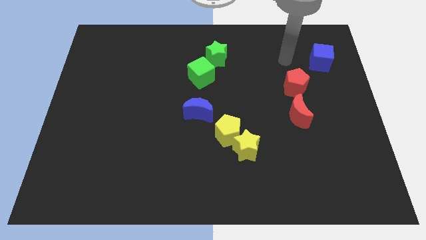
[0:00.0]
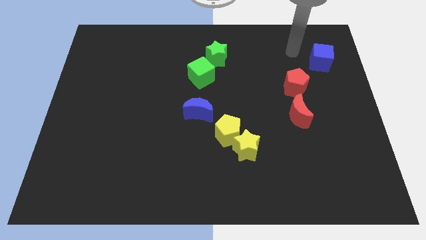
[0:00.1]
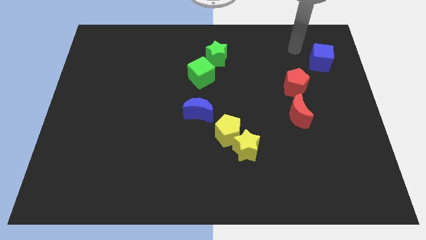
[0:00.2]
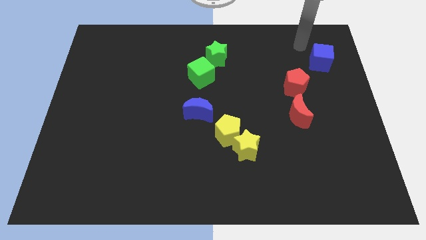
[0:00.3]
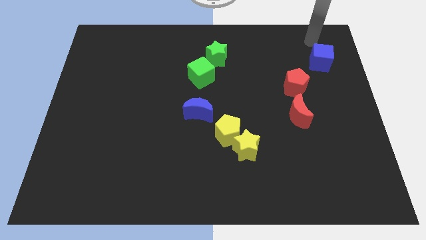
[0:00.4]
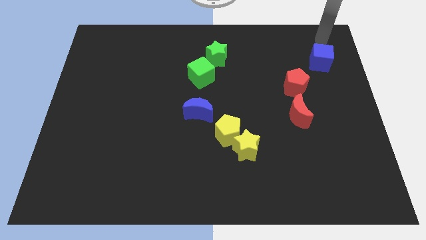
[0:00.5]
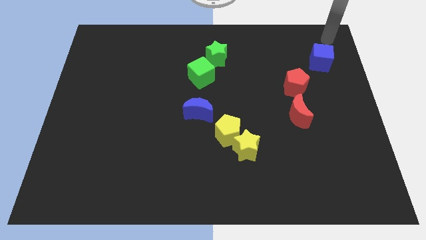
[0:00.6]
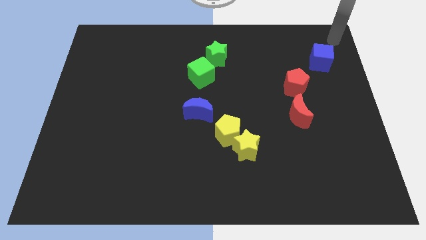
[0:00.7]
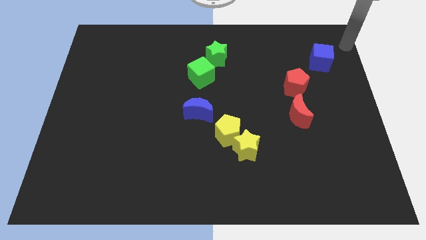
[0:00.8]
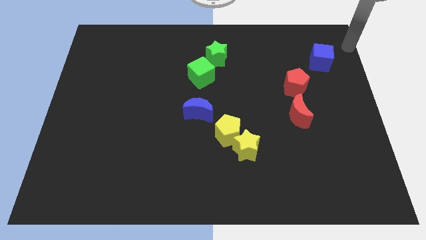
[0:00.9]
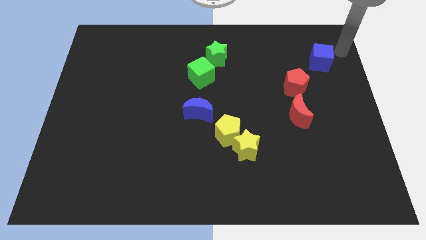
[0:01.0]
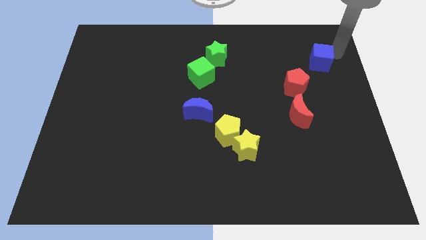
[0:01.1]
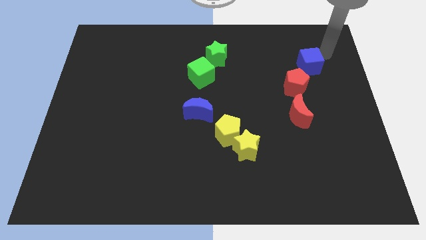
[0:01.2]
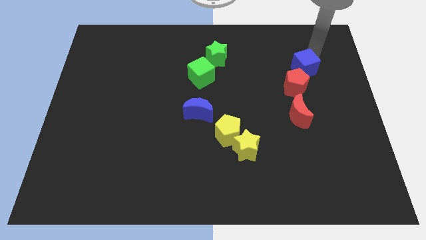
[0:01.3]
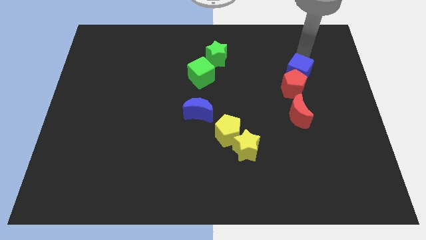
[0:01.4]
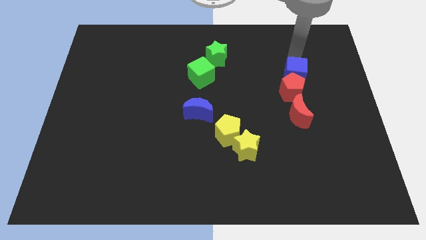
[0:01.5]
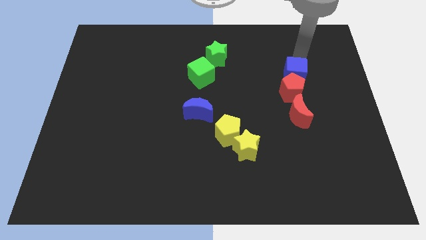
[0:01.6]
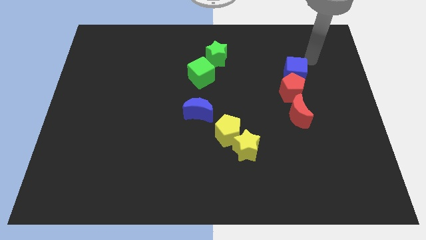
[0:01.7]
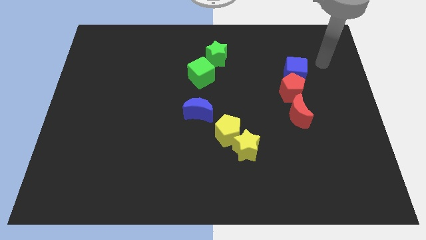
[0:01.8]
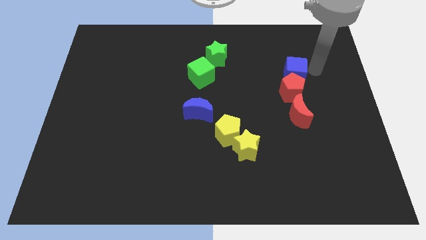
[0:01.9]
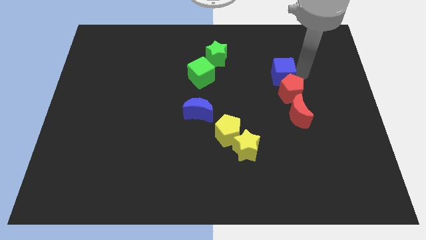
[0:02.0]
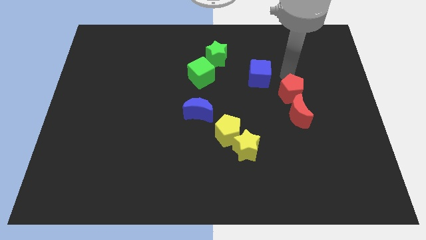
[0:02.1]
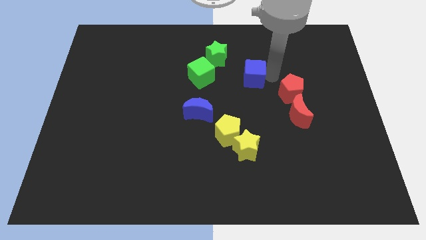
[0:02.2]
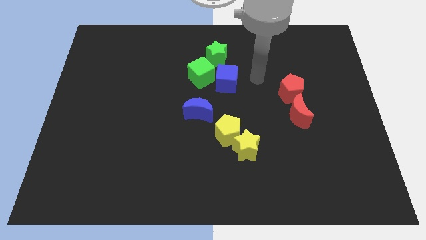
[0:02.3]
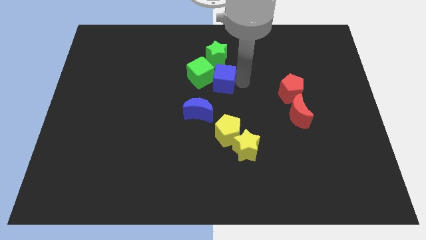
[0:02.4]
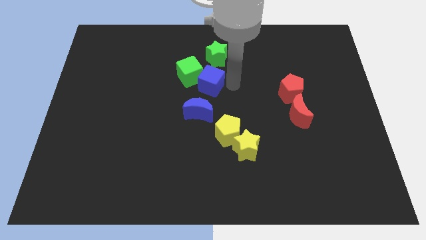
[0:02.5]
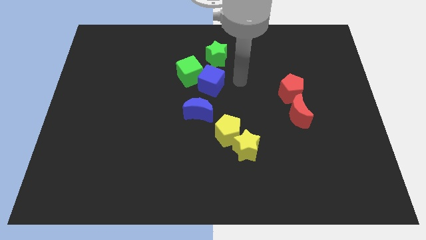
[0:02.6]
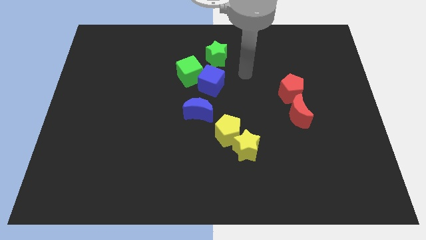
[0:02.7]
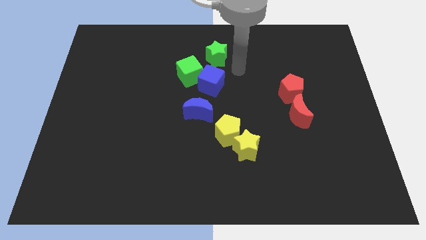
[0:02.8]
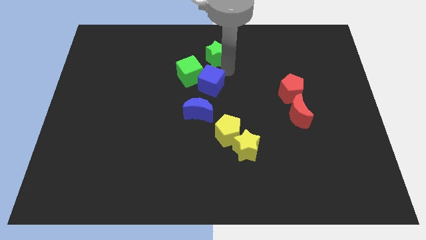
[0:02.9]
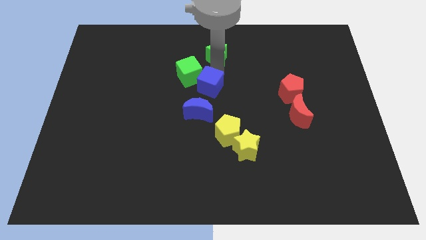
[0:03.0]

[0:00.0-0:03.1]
push the blue cube to the right of the green cube

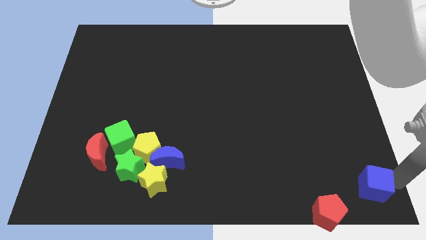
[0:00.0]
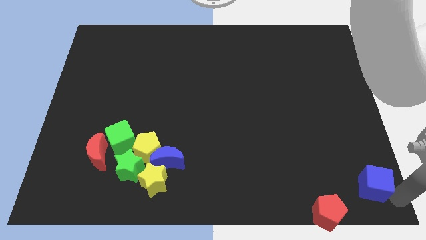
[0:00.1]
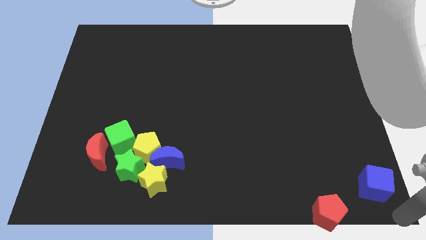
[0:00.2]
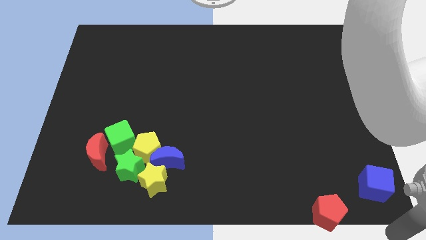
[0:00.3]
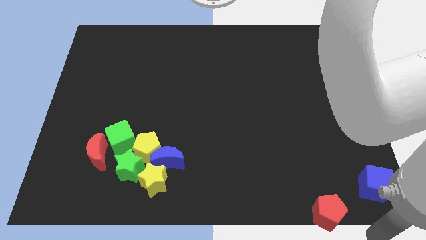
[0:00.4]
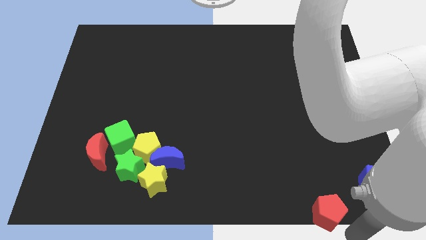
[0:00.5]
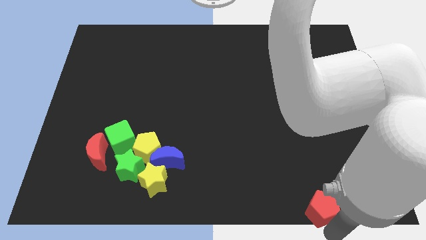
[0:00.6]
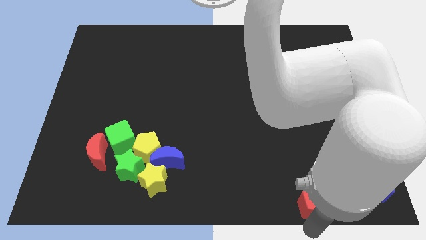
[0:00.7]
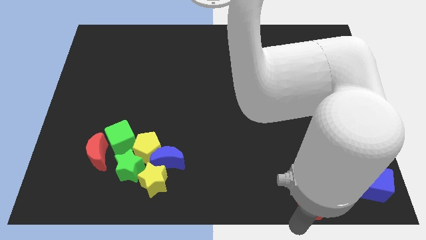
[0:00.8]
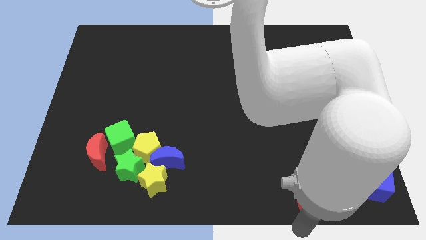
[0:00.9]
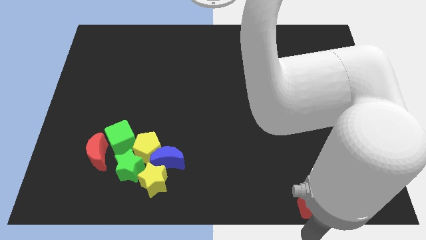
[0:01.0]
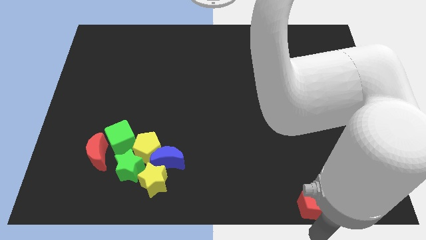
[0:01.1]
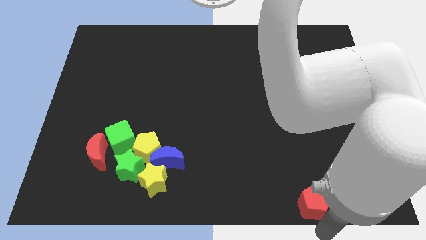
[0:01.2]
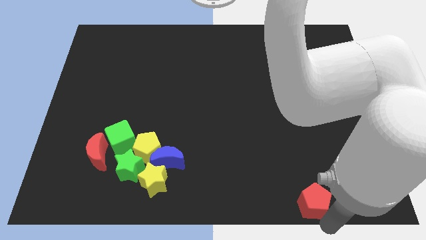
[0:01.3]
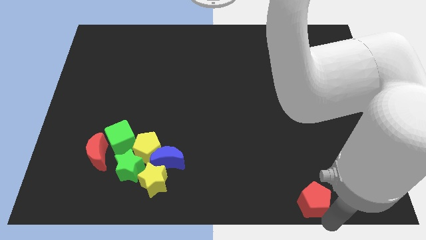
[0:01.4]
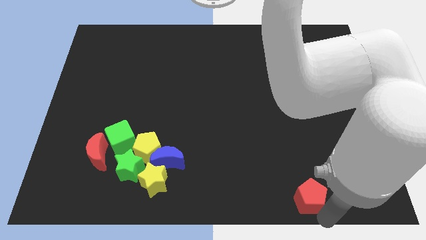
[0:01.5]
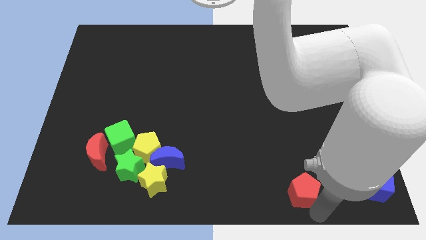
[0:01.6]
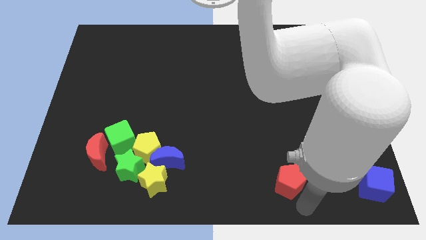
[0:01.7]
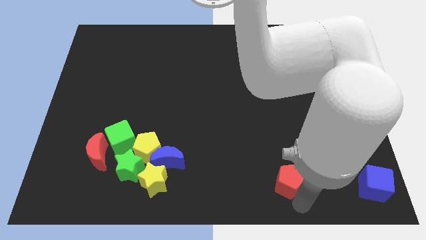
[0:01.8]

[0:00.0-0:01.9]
move the red pentagon to the left of the blue cube

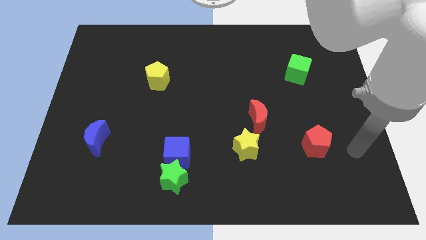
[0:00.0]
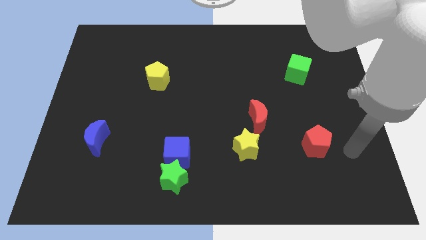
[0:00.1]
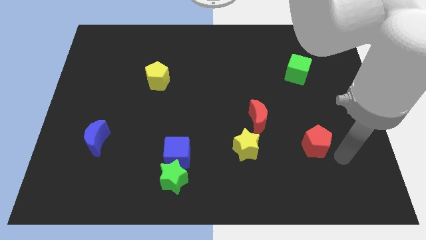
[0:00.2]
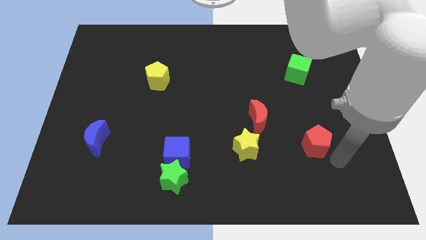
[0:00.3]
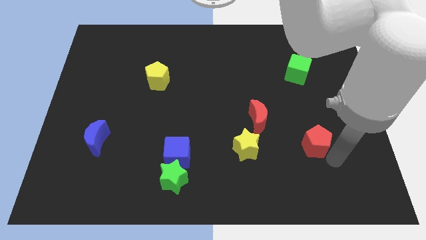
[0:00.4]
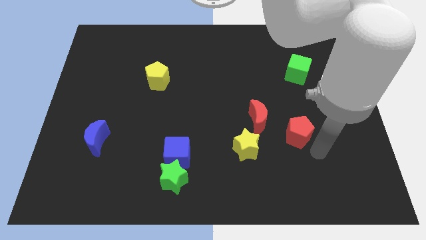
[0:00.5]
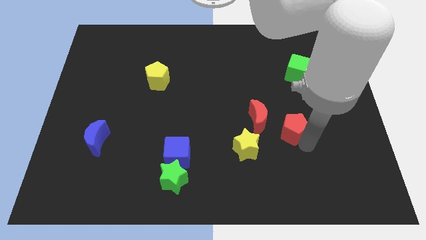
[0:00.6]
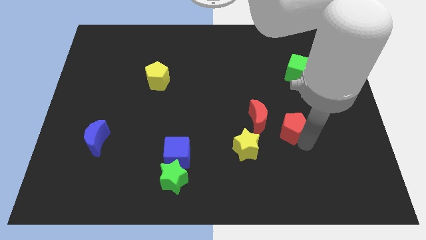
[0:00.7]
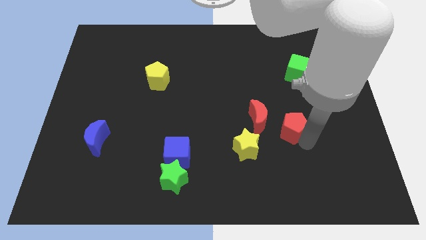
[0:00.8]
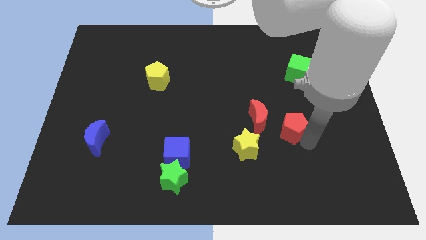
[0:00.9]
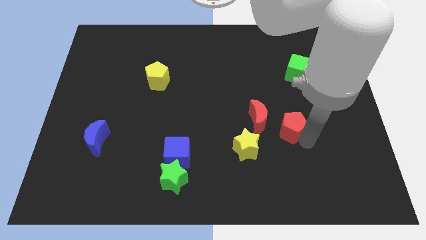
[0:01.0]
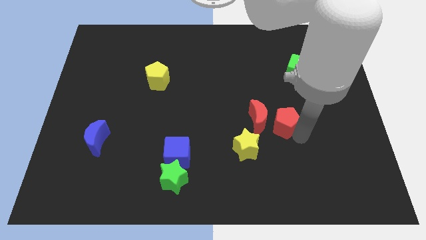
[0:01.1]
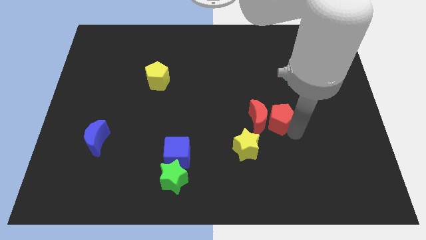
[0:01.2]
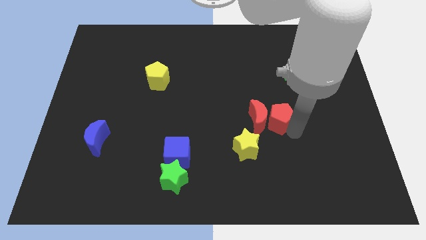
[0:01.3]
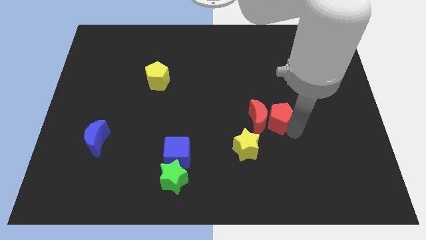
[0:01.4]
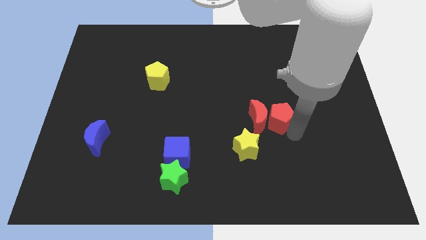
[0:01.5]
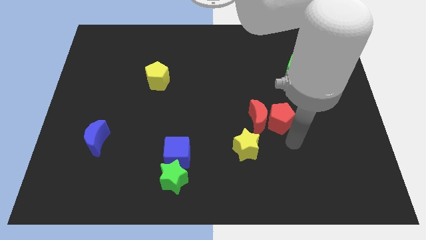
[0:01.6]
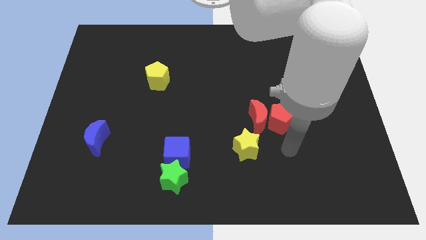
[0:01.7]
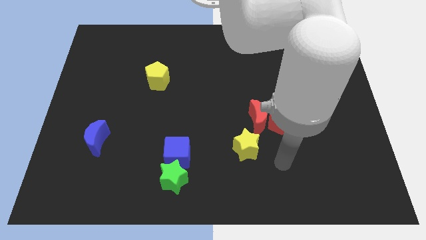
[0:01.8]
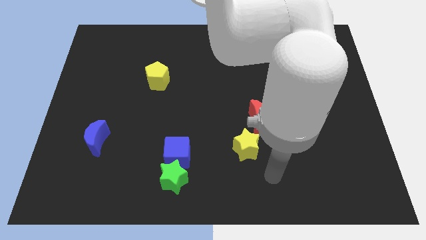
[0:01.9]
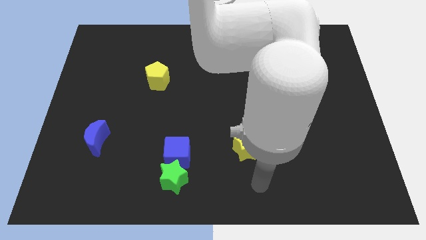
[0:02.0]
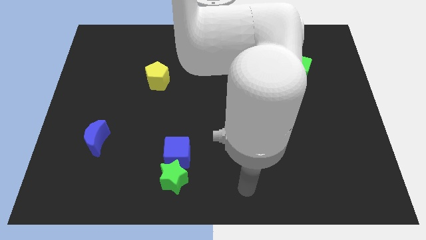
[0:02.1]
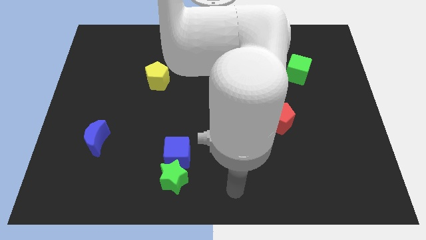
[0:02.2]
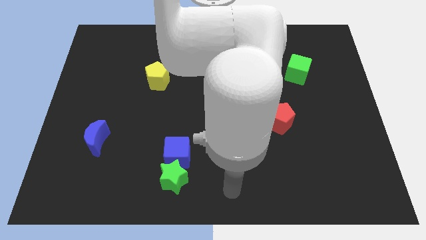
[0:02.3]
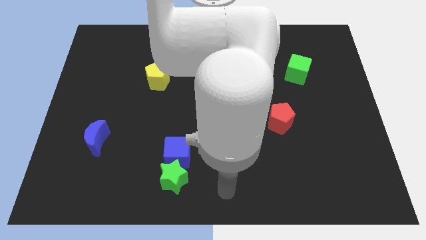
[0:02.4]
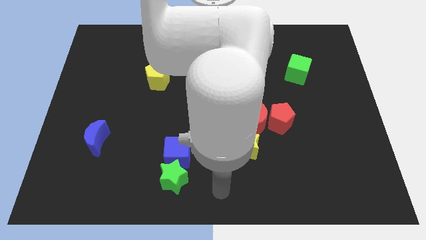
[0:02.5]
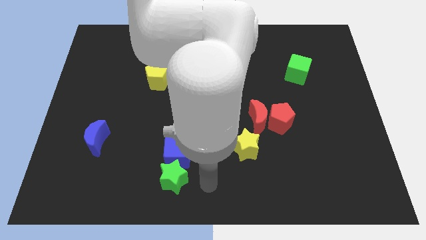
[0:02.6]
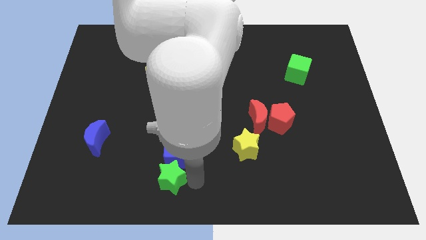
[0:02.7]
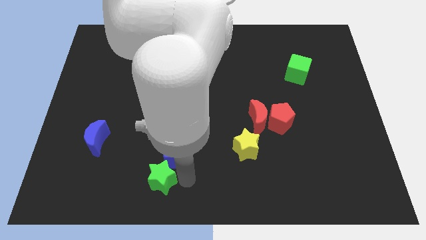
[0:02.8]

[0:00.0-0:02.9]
push the red pentagon right to the red crescent

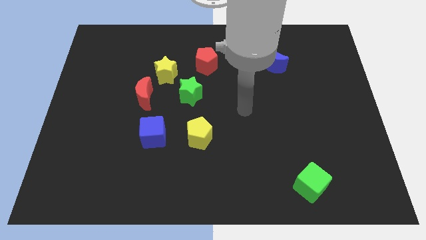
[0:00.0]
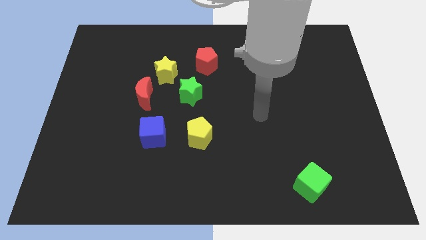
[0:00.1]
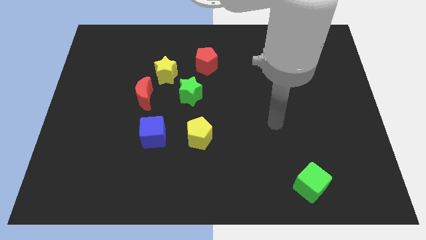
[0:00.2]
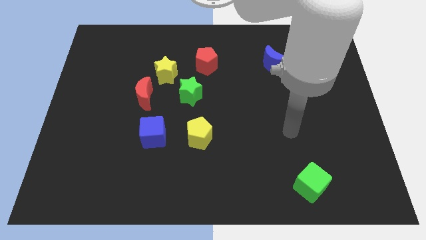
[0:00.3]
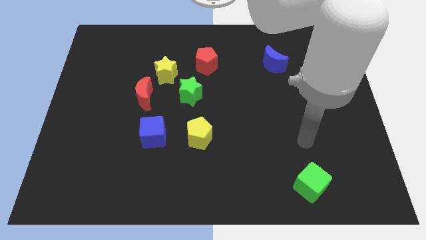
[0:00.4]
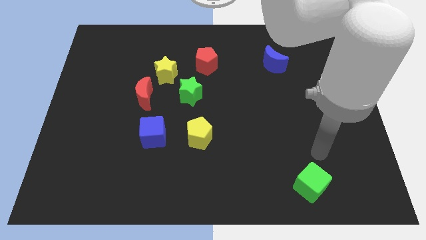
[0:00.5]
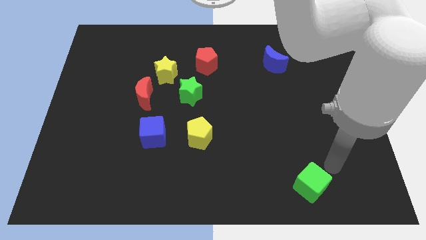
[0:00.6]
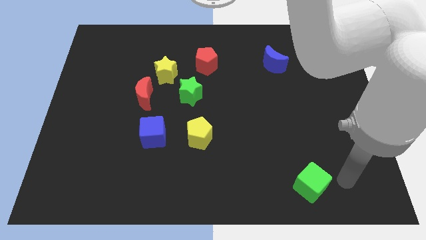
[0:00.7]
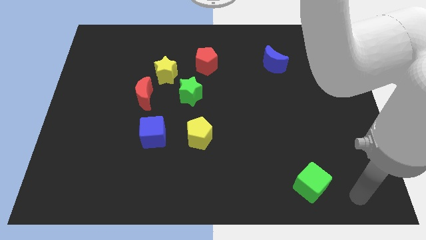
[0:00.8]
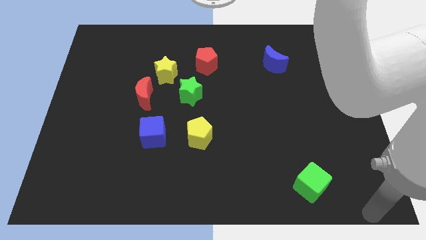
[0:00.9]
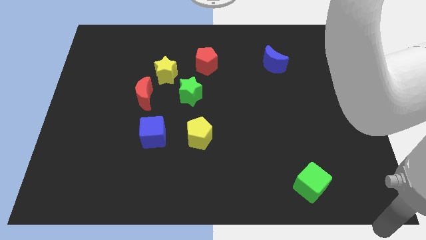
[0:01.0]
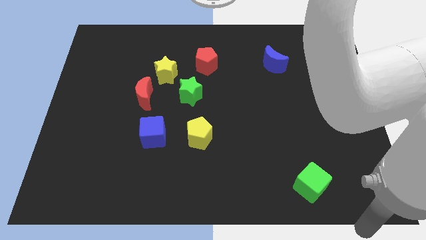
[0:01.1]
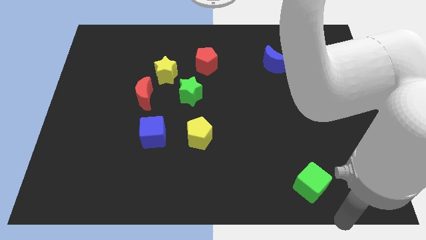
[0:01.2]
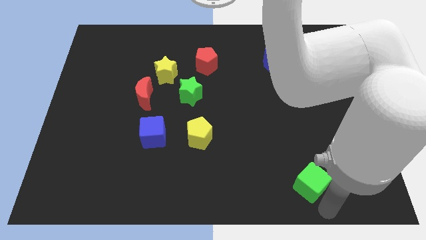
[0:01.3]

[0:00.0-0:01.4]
move the arm towards the green cube
